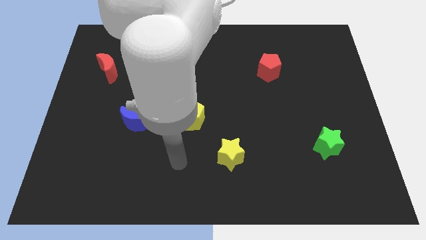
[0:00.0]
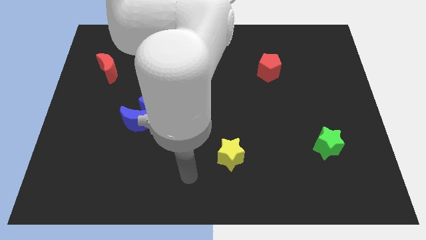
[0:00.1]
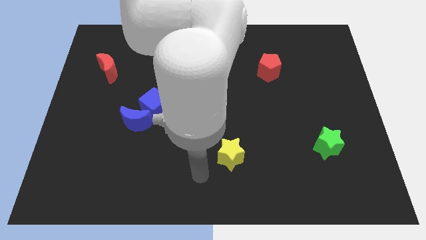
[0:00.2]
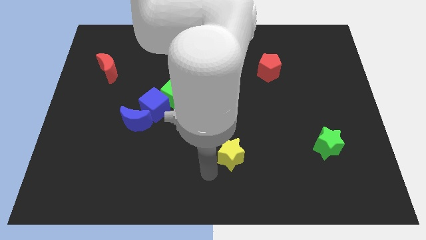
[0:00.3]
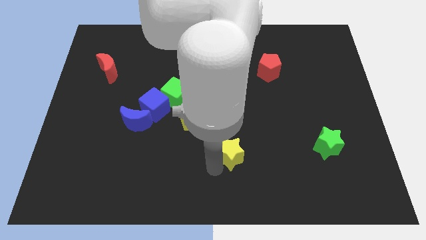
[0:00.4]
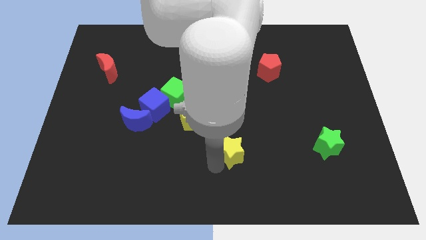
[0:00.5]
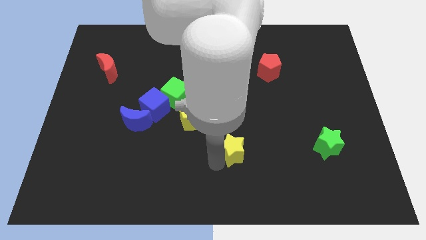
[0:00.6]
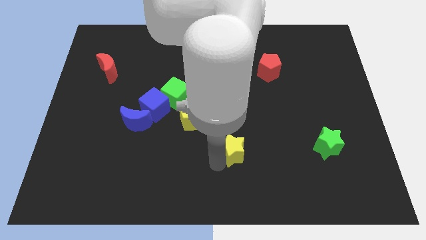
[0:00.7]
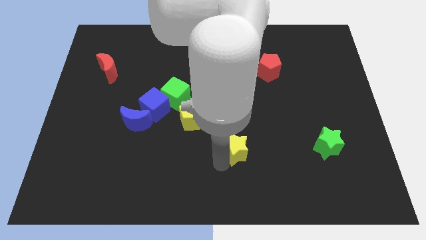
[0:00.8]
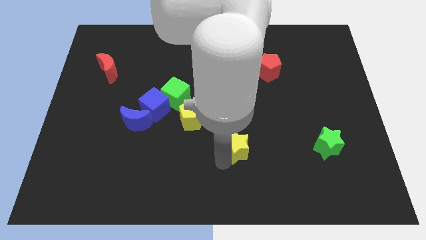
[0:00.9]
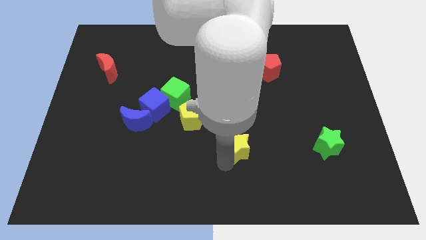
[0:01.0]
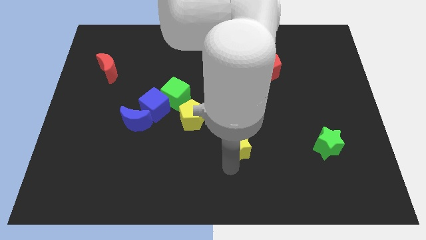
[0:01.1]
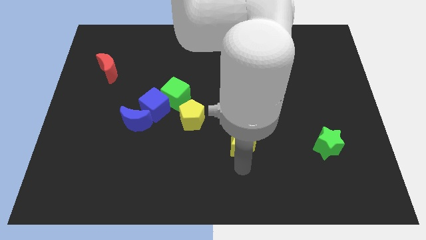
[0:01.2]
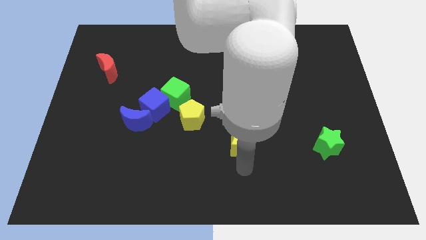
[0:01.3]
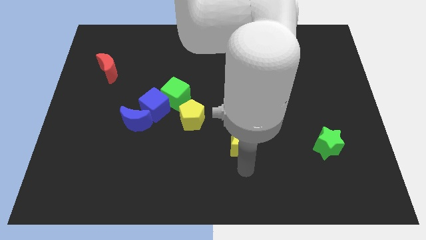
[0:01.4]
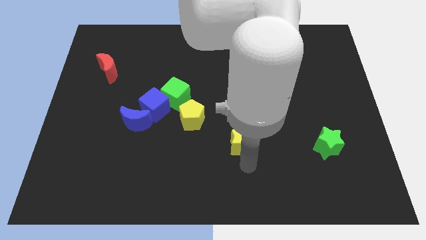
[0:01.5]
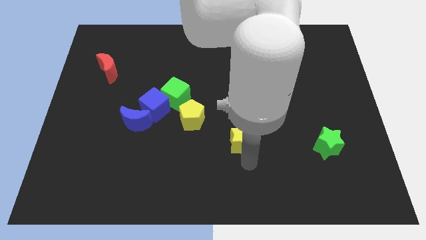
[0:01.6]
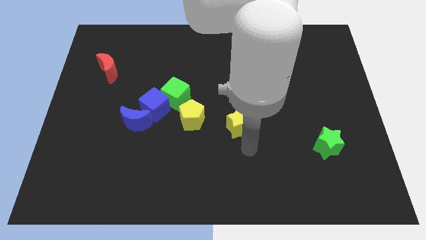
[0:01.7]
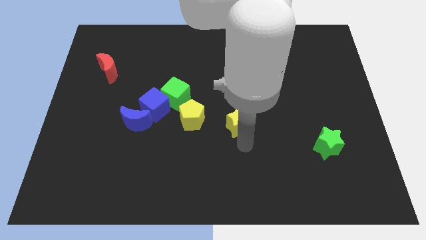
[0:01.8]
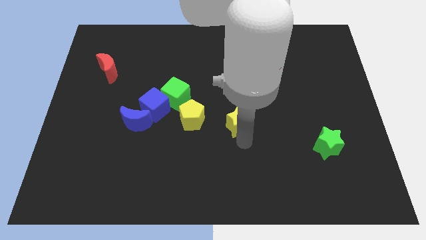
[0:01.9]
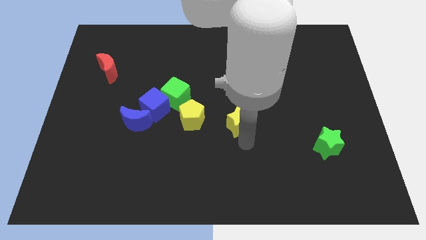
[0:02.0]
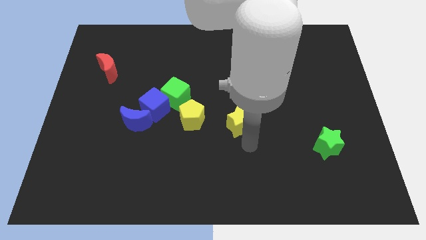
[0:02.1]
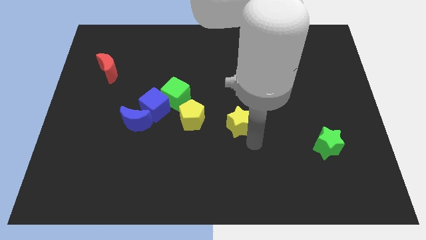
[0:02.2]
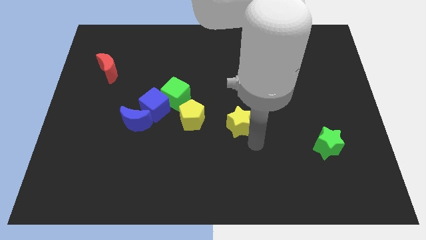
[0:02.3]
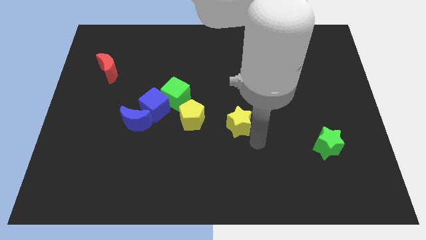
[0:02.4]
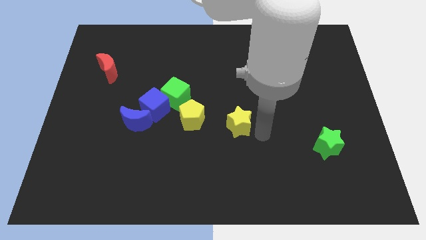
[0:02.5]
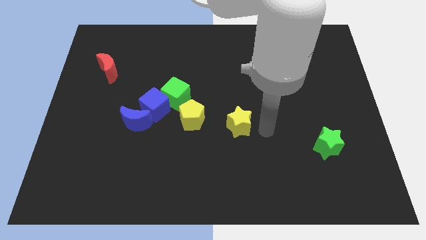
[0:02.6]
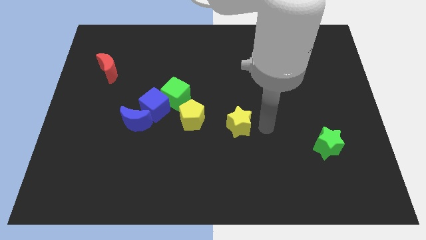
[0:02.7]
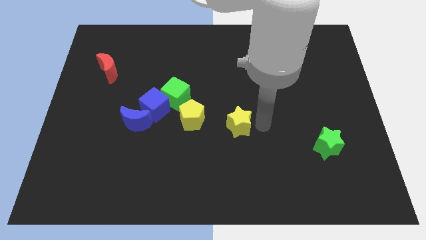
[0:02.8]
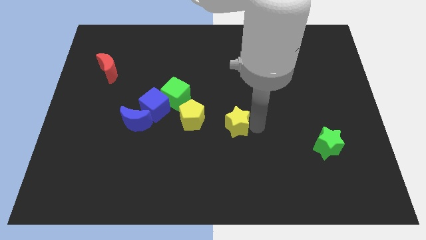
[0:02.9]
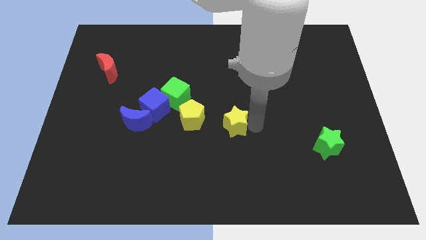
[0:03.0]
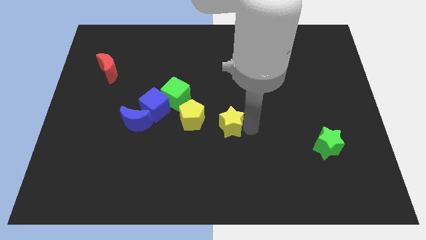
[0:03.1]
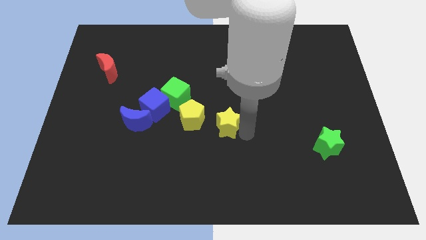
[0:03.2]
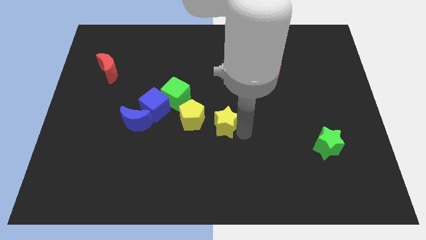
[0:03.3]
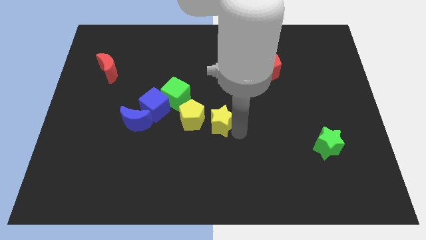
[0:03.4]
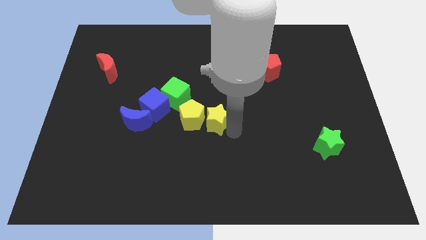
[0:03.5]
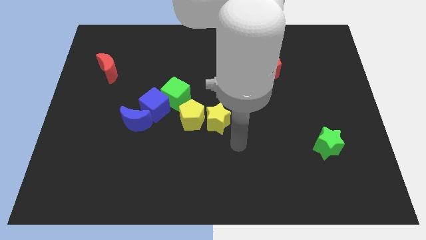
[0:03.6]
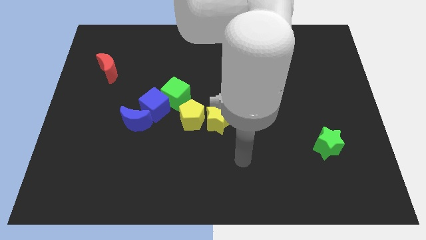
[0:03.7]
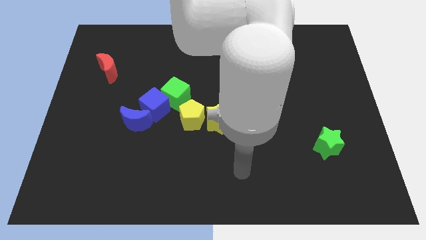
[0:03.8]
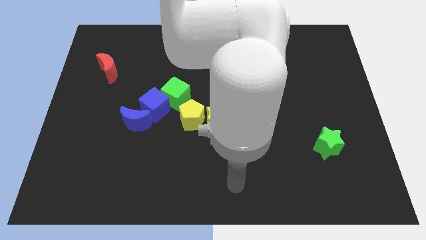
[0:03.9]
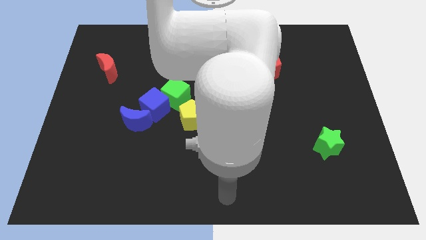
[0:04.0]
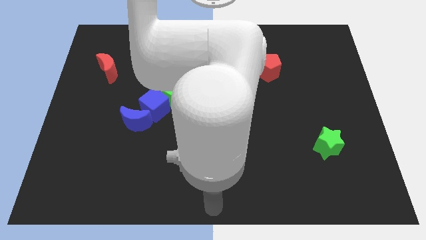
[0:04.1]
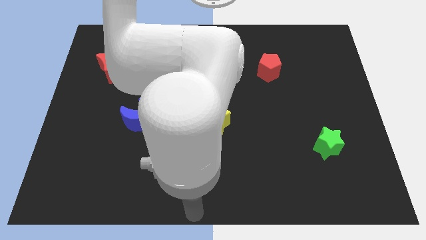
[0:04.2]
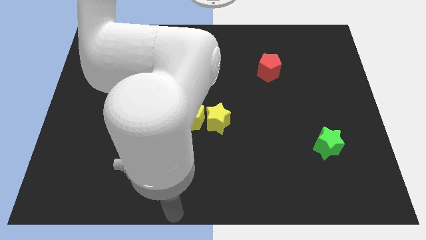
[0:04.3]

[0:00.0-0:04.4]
push the yellow star close to the yellow pentagon

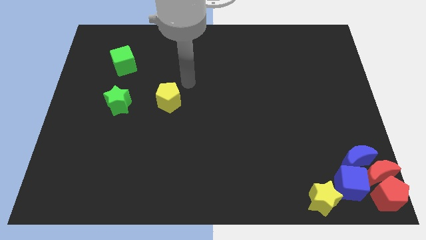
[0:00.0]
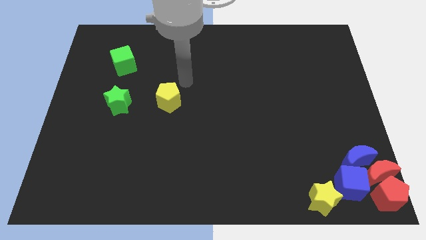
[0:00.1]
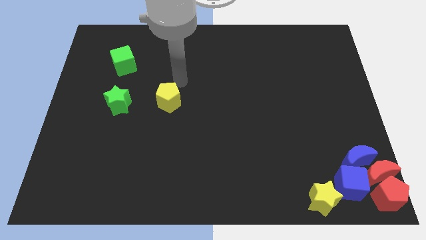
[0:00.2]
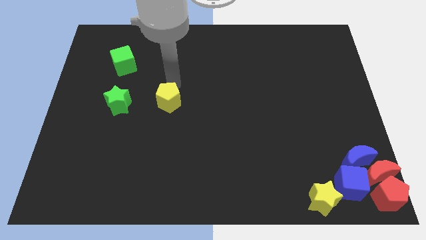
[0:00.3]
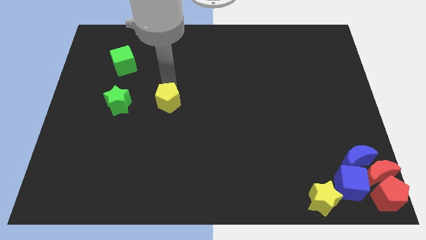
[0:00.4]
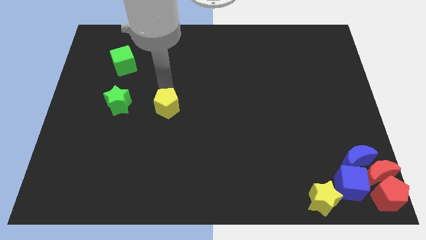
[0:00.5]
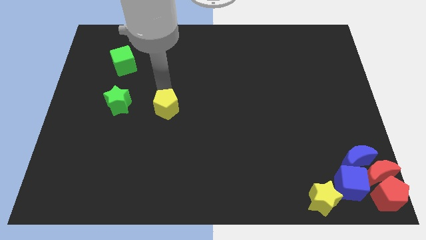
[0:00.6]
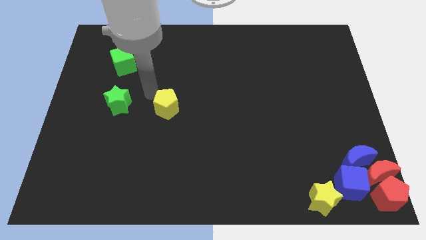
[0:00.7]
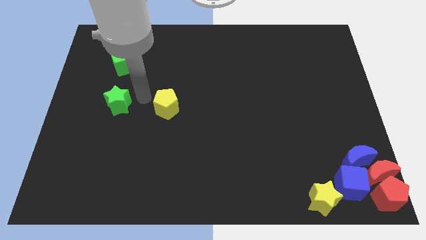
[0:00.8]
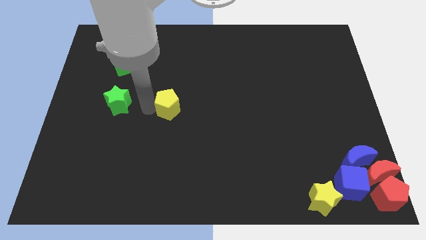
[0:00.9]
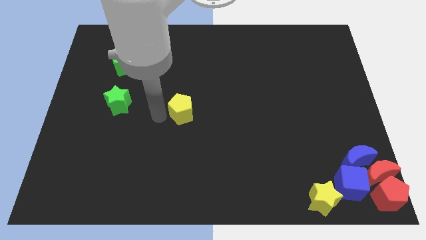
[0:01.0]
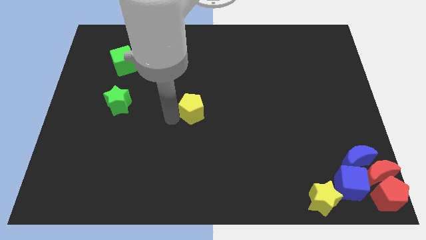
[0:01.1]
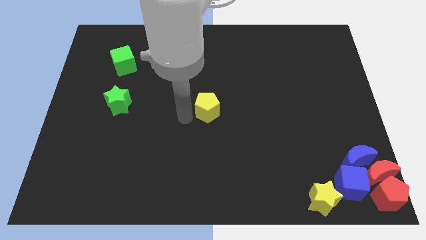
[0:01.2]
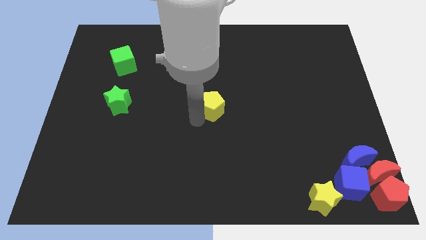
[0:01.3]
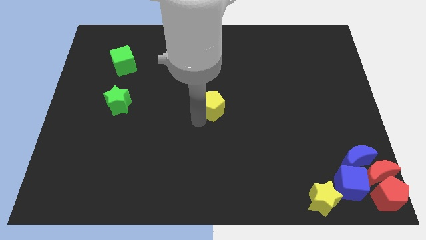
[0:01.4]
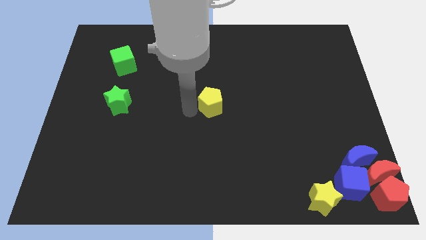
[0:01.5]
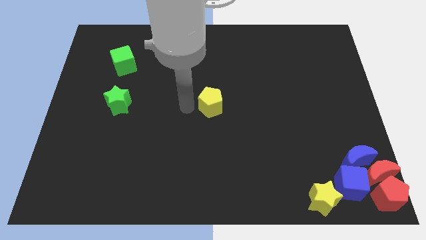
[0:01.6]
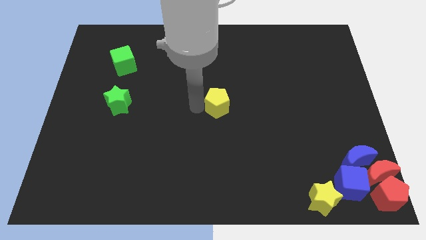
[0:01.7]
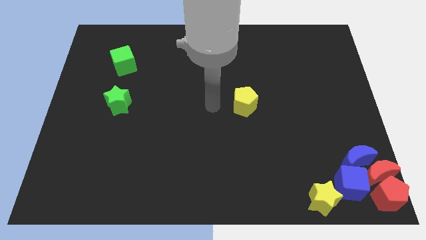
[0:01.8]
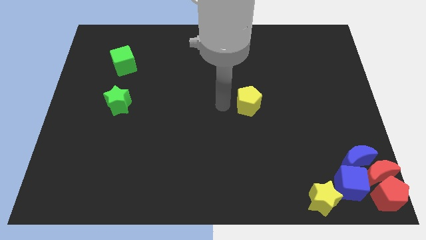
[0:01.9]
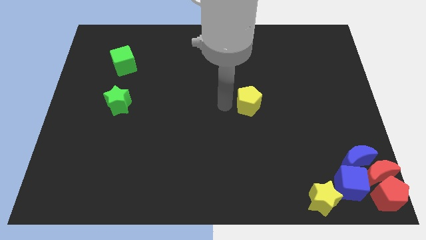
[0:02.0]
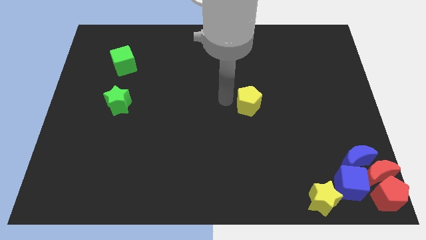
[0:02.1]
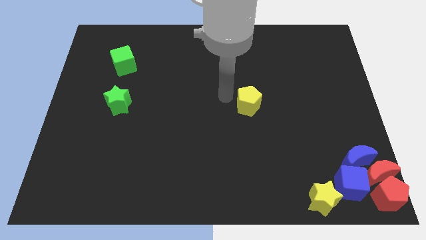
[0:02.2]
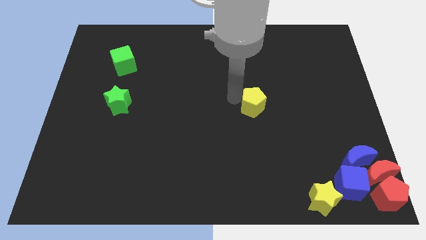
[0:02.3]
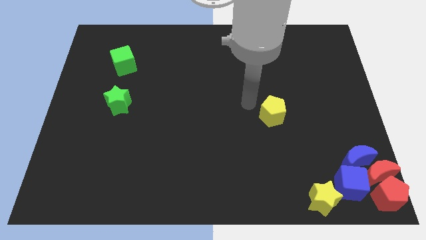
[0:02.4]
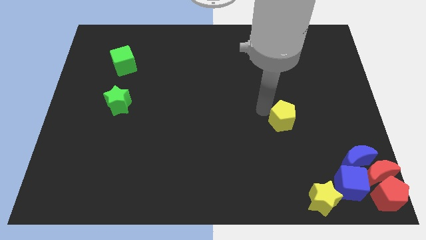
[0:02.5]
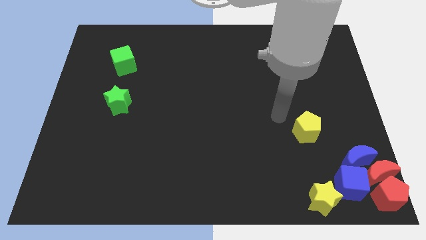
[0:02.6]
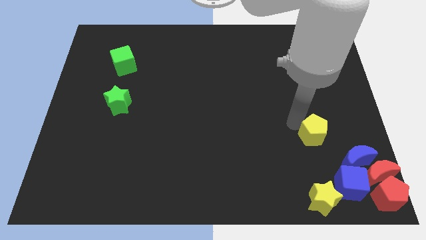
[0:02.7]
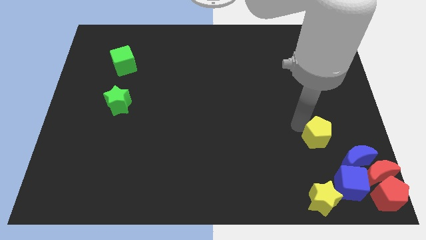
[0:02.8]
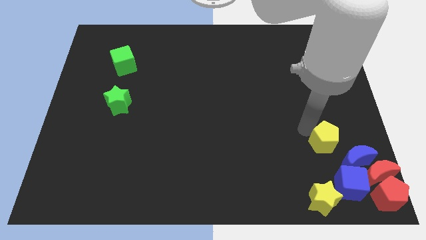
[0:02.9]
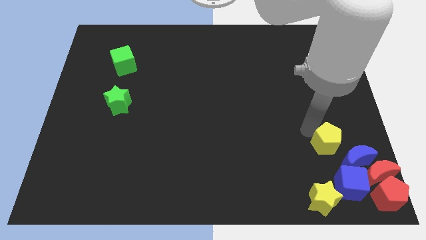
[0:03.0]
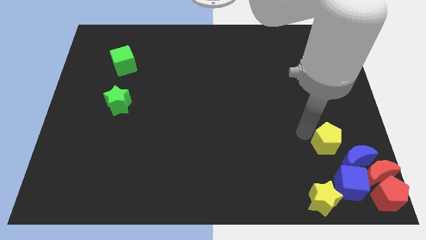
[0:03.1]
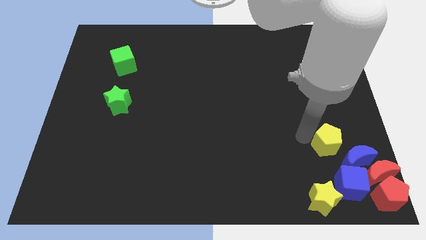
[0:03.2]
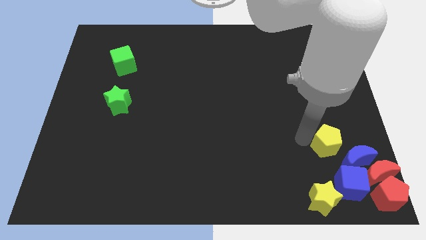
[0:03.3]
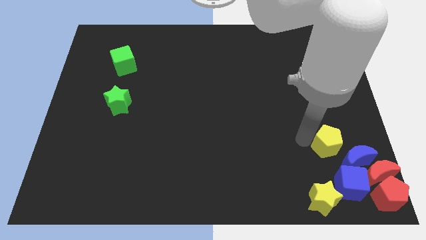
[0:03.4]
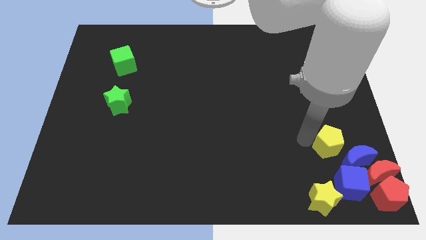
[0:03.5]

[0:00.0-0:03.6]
push the yellow pentagon to the top left side of the blue moon

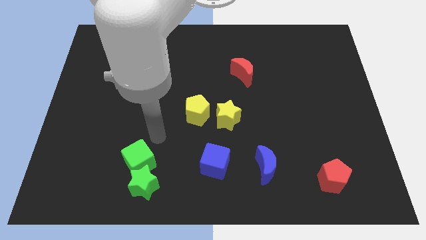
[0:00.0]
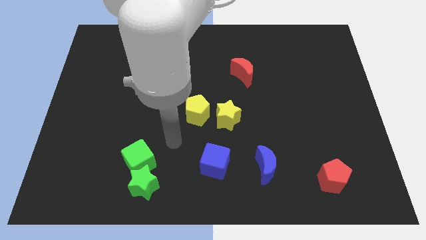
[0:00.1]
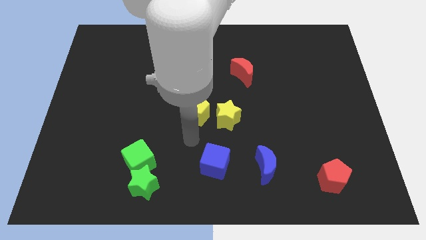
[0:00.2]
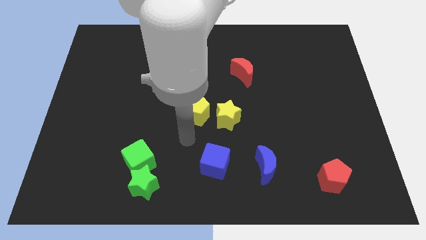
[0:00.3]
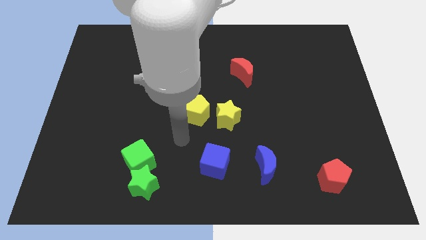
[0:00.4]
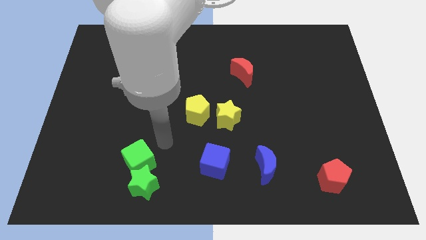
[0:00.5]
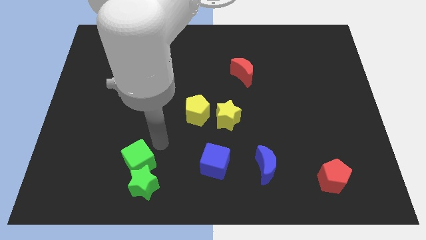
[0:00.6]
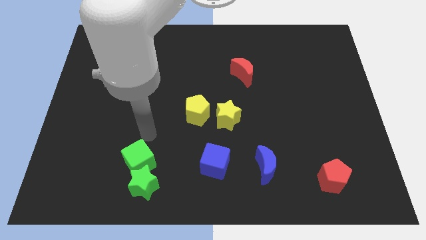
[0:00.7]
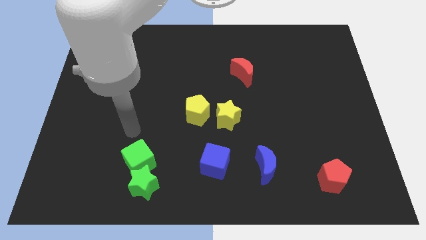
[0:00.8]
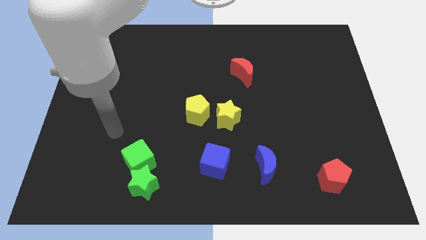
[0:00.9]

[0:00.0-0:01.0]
move your arm to the top side of the green cube
